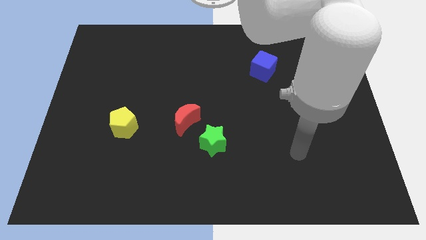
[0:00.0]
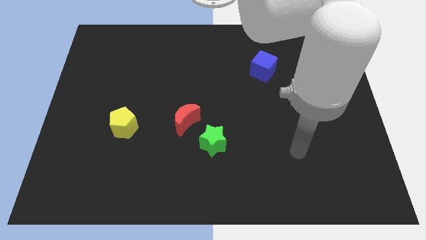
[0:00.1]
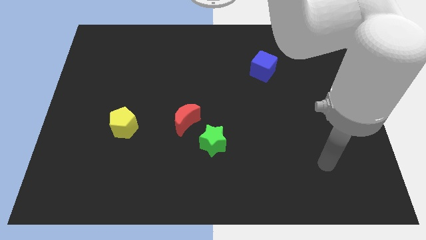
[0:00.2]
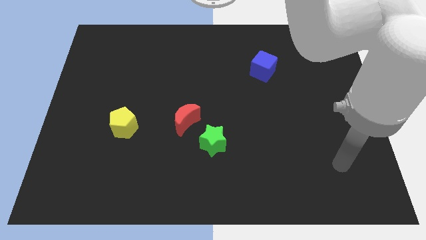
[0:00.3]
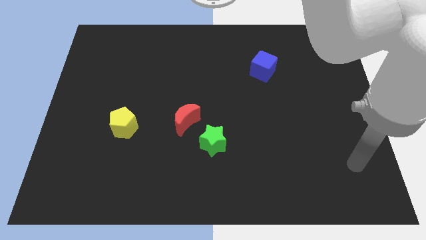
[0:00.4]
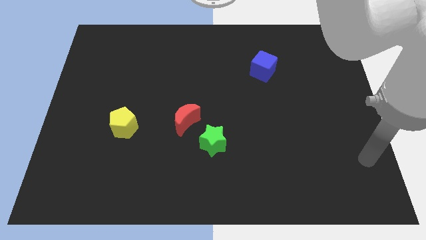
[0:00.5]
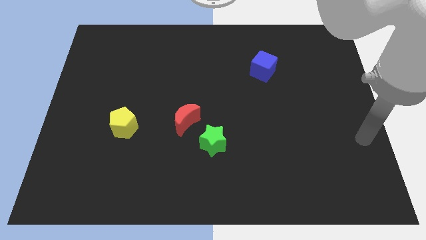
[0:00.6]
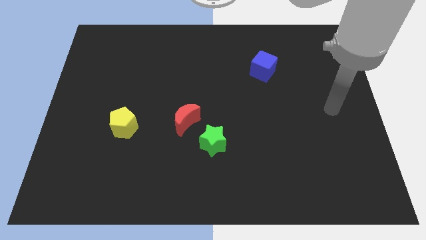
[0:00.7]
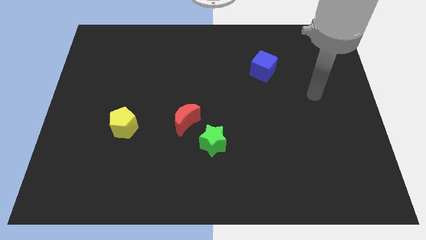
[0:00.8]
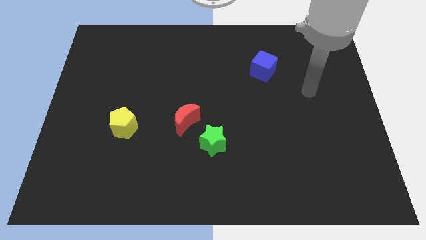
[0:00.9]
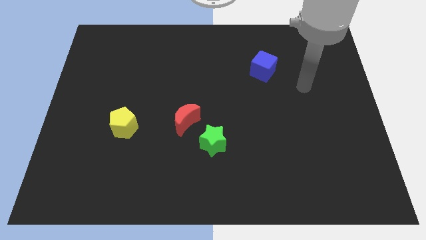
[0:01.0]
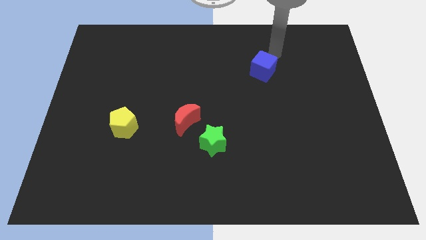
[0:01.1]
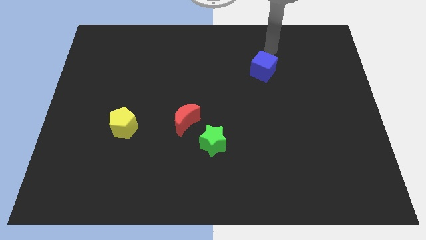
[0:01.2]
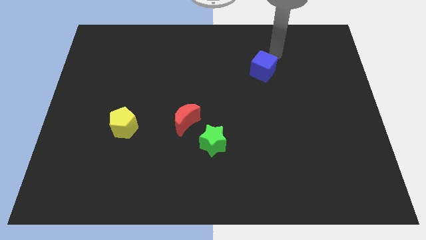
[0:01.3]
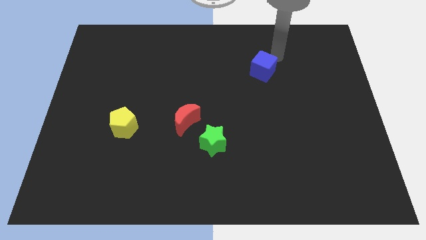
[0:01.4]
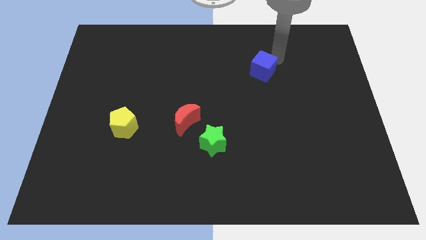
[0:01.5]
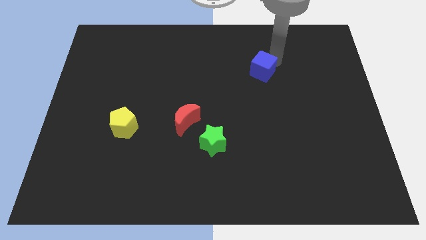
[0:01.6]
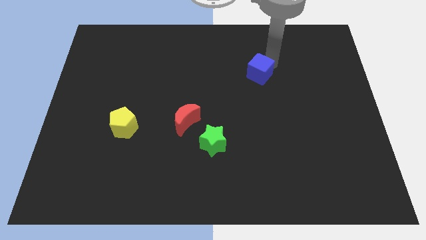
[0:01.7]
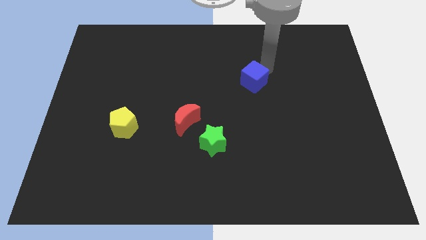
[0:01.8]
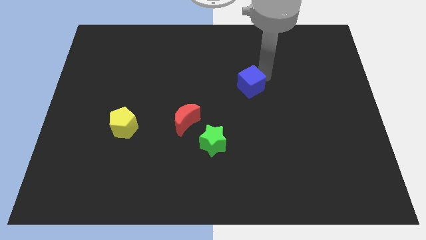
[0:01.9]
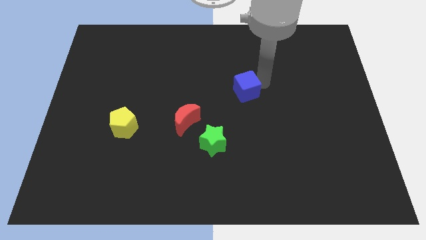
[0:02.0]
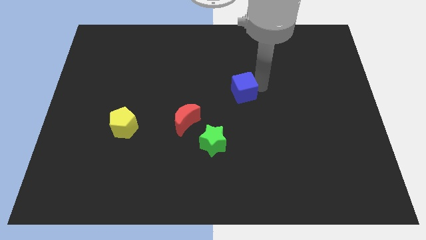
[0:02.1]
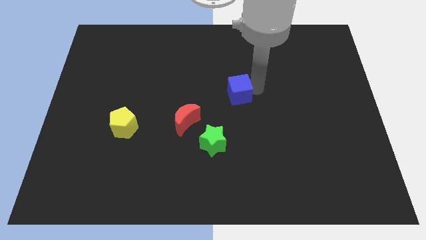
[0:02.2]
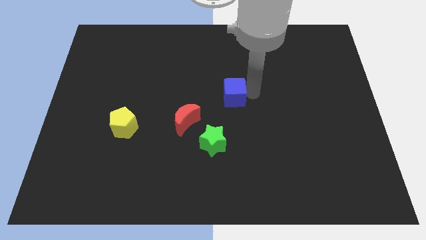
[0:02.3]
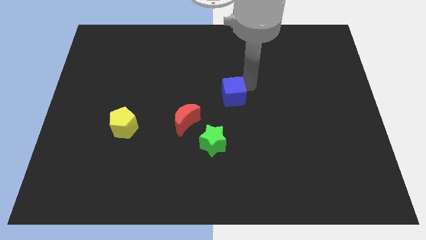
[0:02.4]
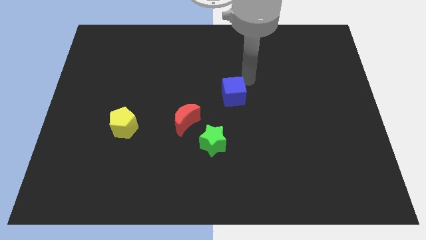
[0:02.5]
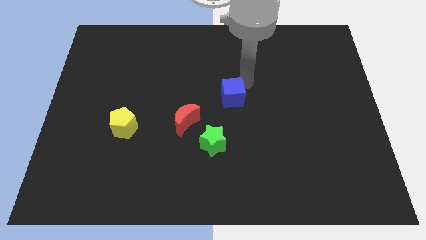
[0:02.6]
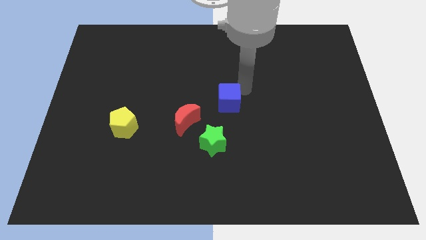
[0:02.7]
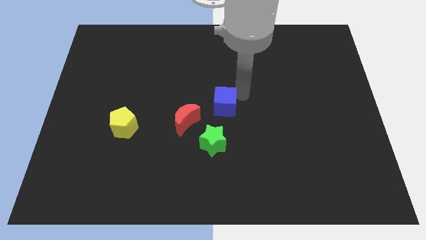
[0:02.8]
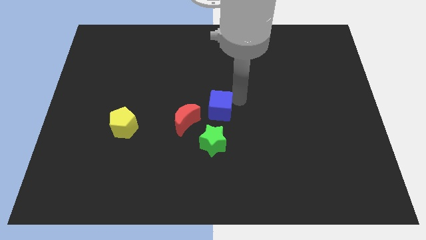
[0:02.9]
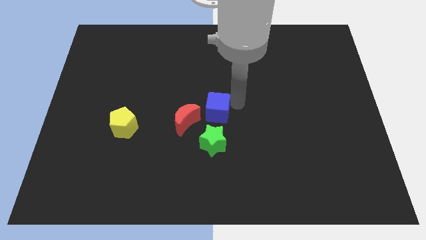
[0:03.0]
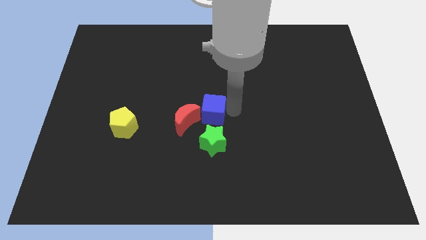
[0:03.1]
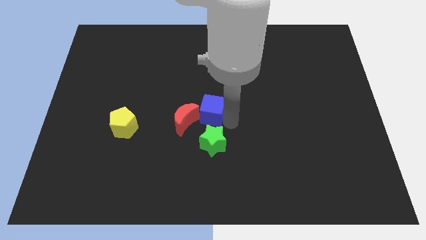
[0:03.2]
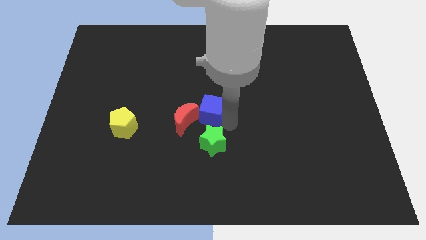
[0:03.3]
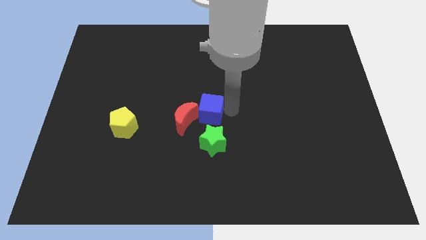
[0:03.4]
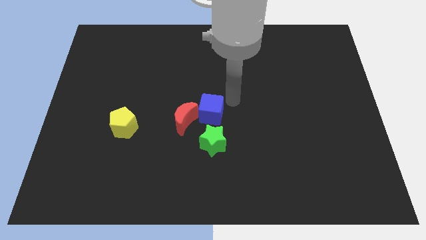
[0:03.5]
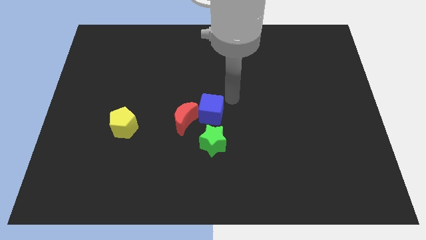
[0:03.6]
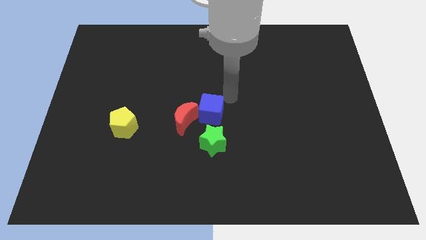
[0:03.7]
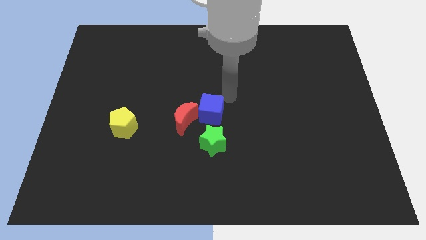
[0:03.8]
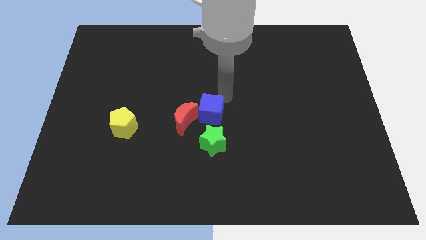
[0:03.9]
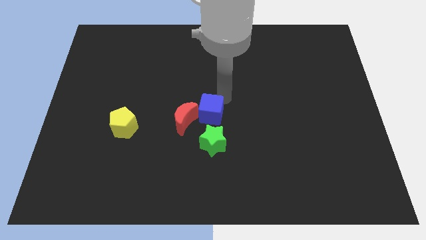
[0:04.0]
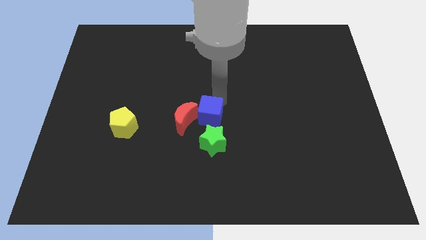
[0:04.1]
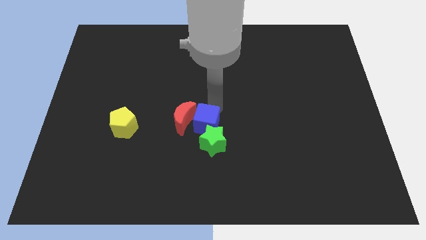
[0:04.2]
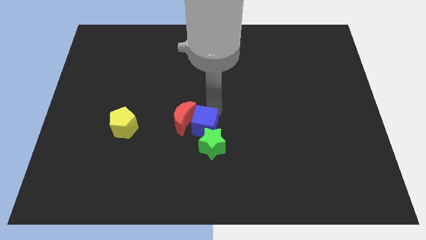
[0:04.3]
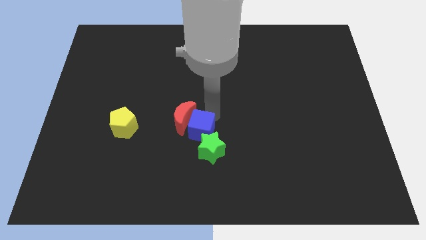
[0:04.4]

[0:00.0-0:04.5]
push the blue block next to the green block

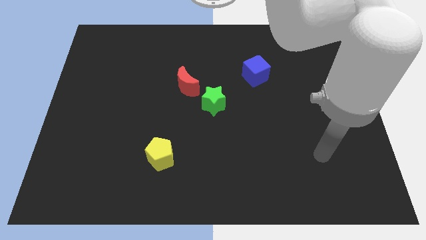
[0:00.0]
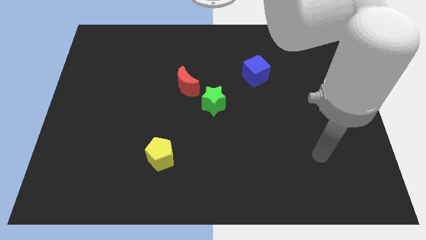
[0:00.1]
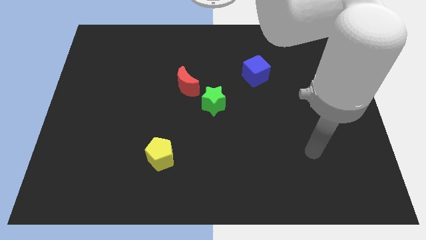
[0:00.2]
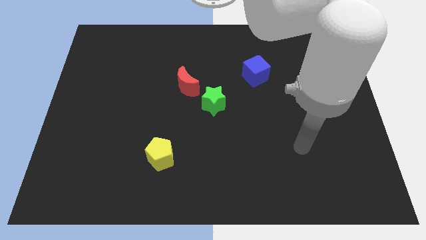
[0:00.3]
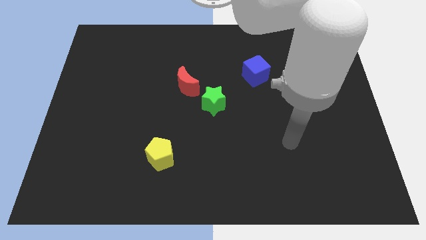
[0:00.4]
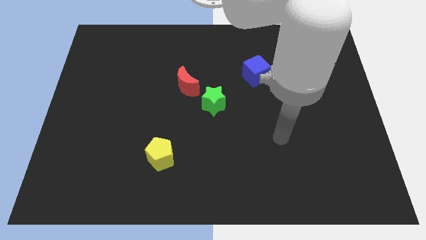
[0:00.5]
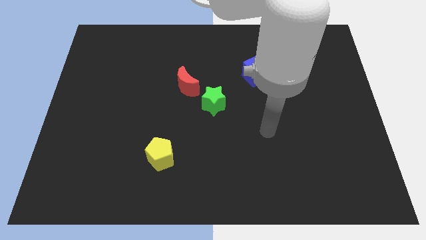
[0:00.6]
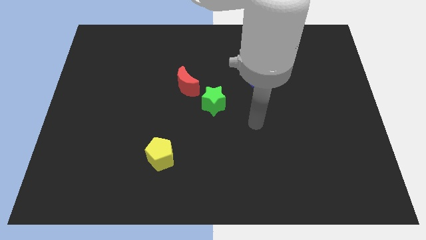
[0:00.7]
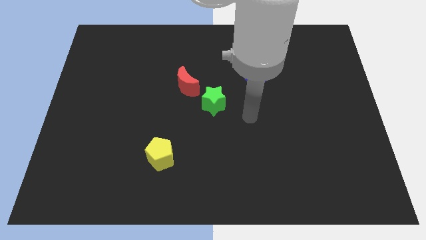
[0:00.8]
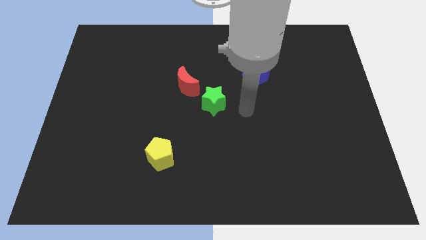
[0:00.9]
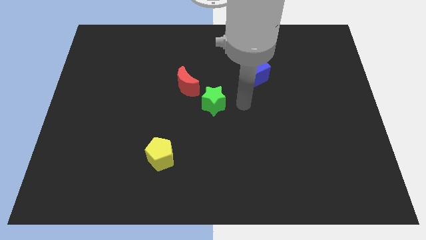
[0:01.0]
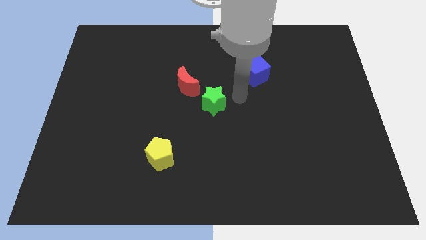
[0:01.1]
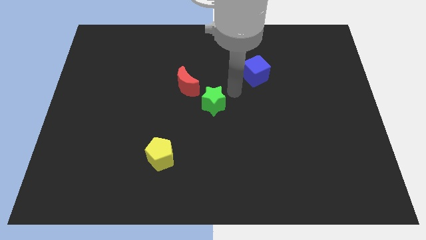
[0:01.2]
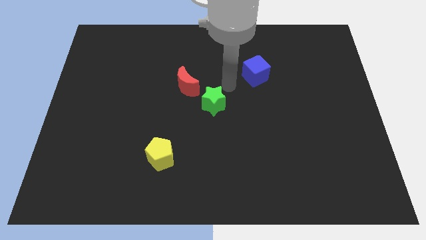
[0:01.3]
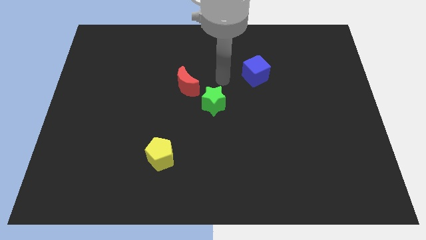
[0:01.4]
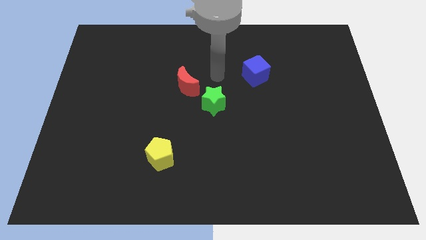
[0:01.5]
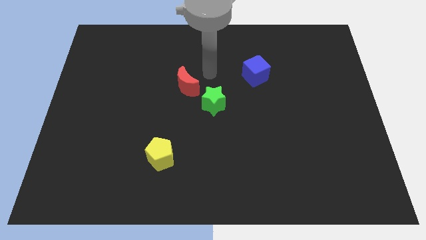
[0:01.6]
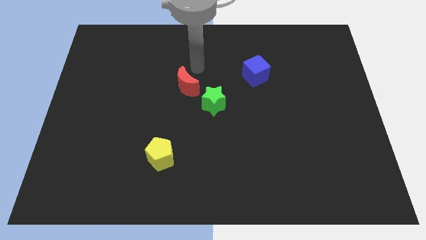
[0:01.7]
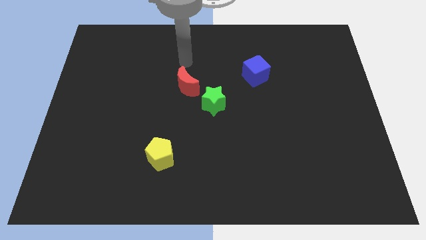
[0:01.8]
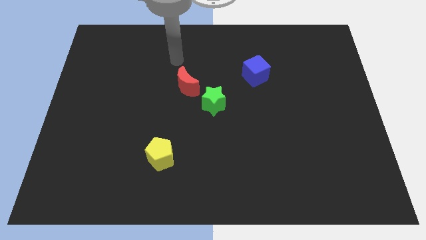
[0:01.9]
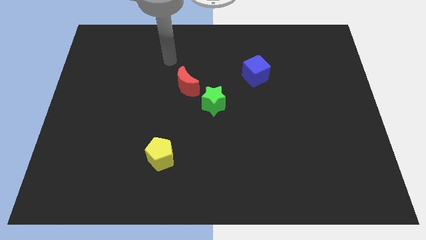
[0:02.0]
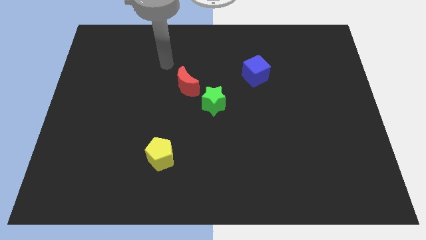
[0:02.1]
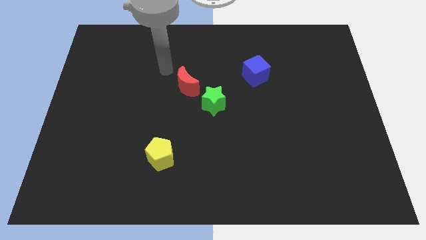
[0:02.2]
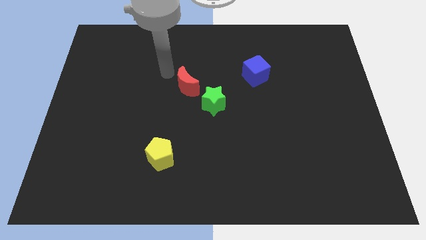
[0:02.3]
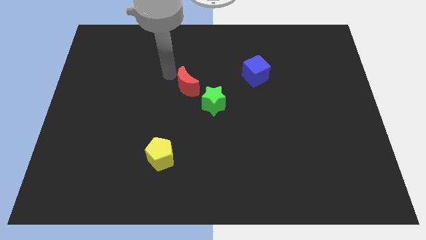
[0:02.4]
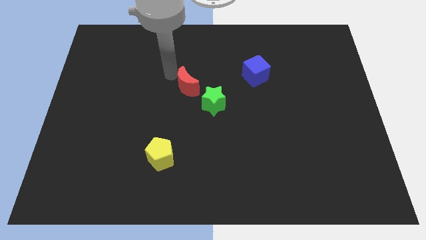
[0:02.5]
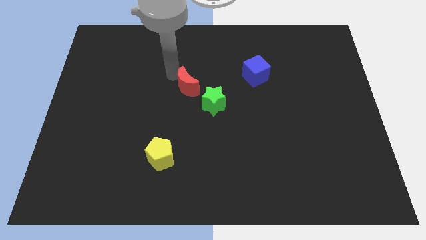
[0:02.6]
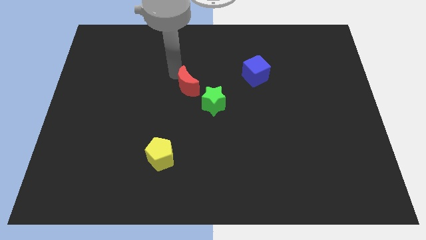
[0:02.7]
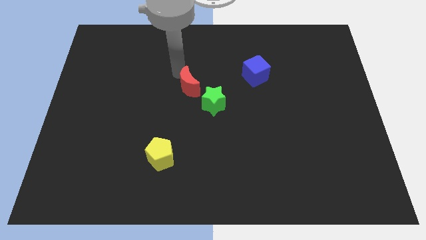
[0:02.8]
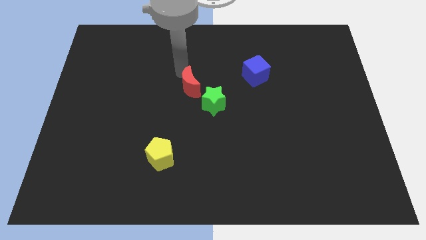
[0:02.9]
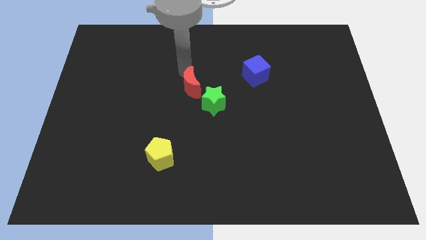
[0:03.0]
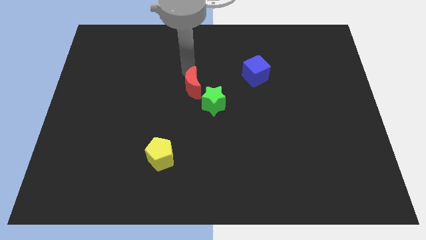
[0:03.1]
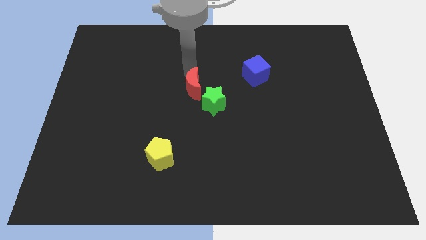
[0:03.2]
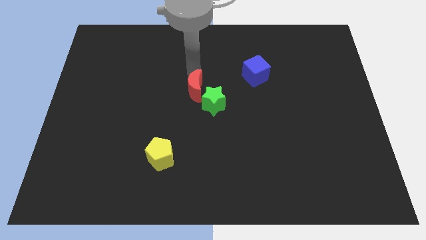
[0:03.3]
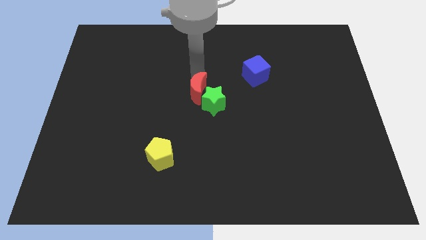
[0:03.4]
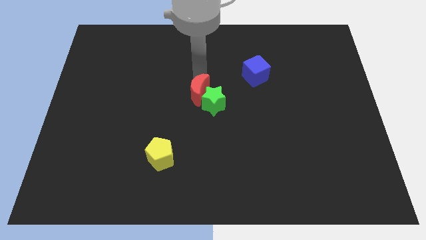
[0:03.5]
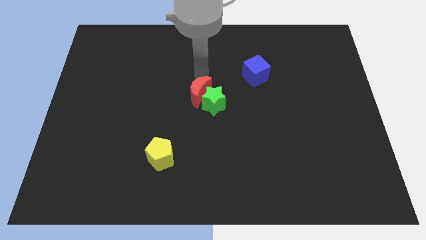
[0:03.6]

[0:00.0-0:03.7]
move the red block towards the green block
